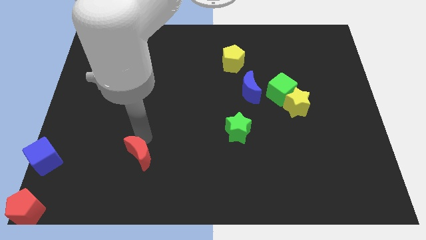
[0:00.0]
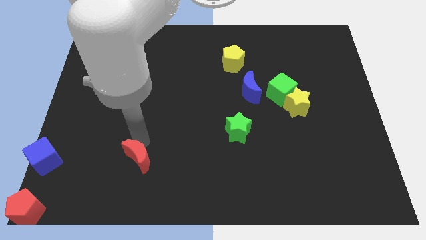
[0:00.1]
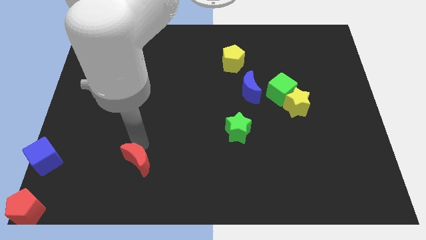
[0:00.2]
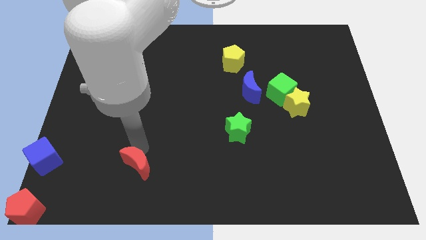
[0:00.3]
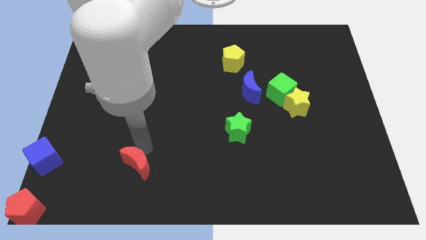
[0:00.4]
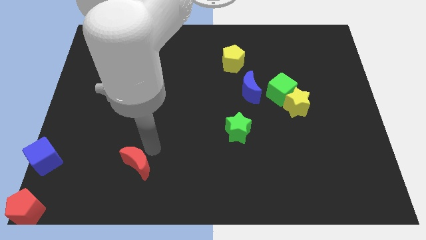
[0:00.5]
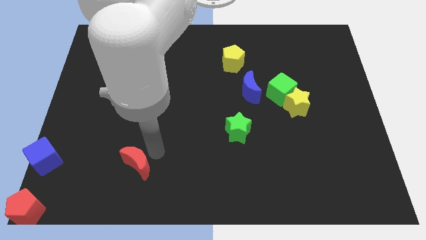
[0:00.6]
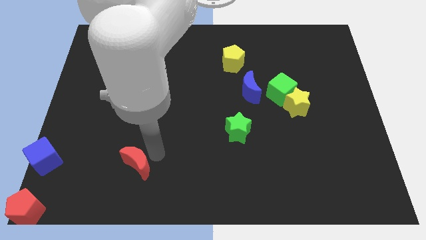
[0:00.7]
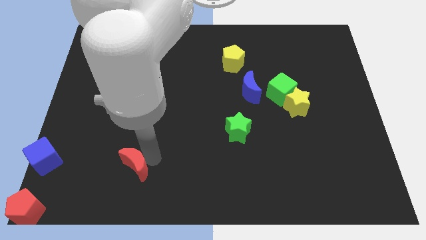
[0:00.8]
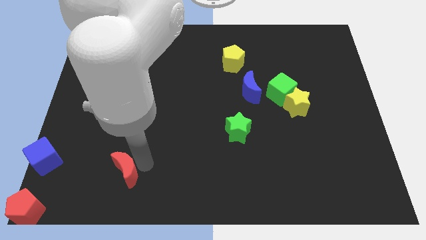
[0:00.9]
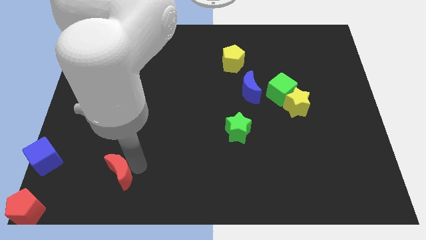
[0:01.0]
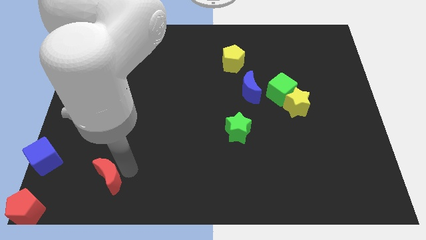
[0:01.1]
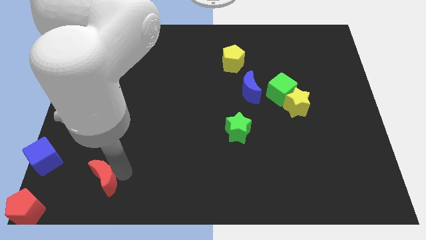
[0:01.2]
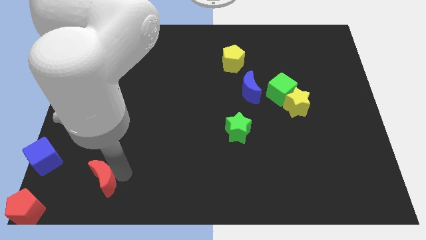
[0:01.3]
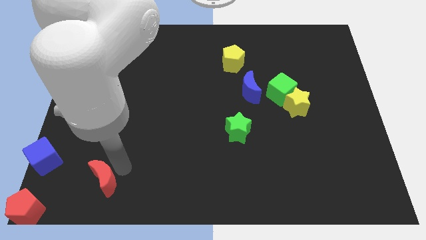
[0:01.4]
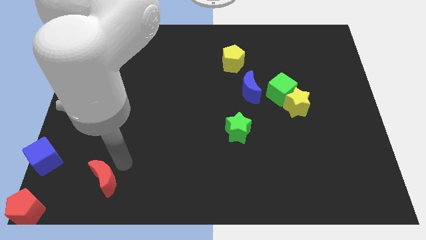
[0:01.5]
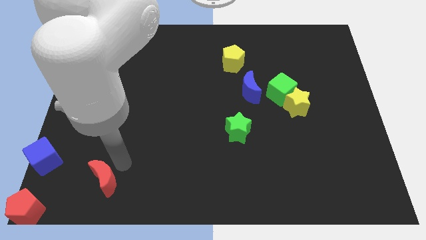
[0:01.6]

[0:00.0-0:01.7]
move the red crescent towards the red pentagon

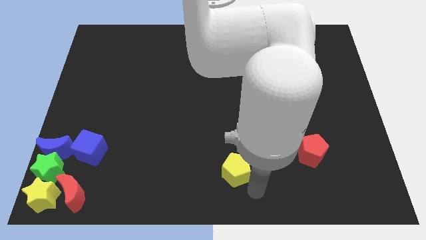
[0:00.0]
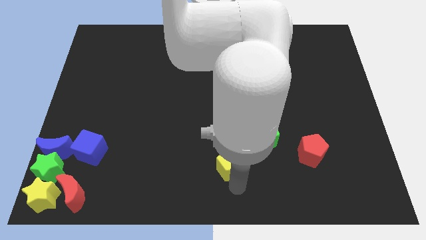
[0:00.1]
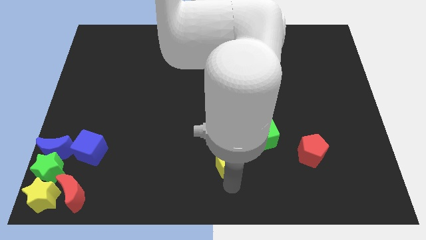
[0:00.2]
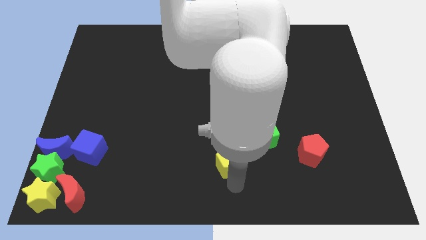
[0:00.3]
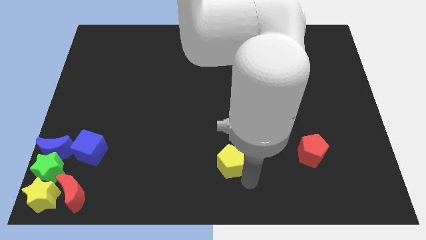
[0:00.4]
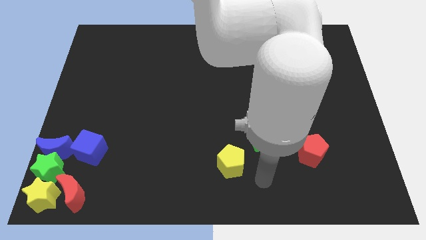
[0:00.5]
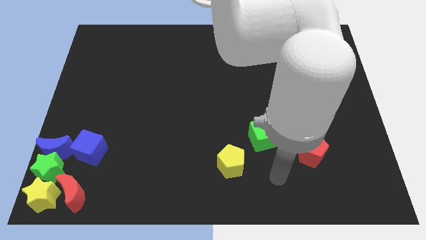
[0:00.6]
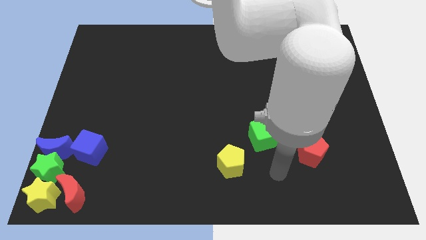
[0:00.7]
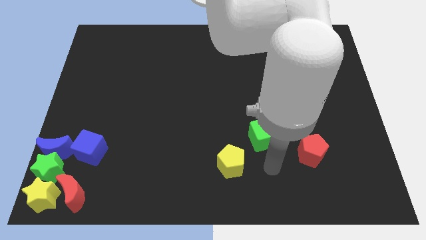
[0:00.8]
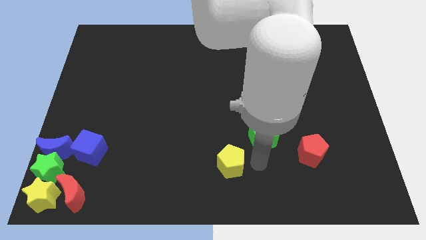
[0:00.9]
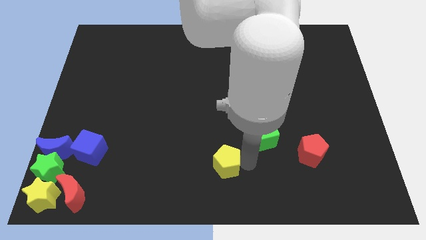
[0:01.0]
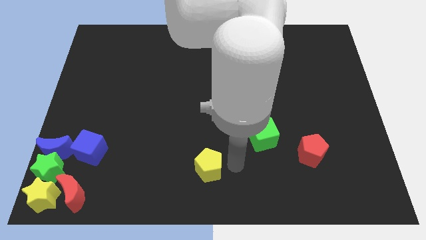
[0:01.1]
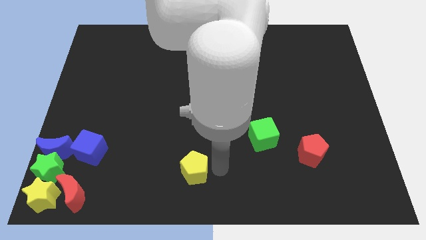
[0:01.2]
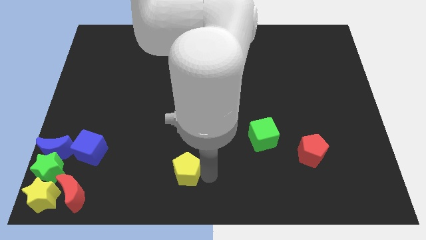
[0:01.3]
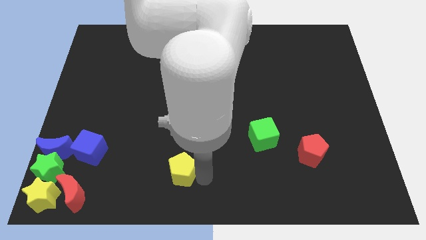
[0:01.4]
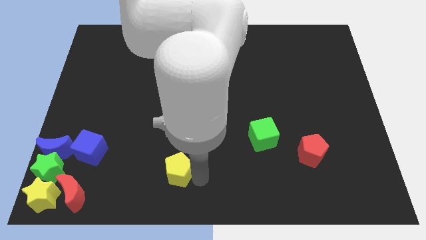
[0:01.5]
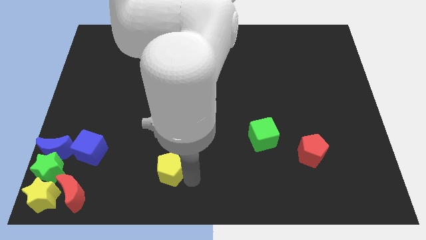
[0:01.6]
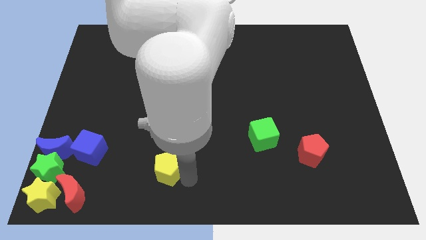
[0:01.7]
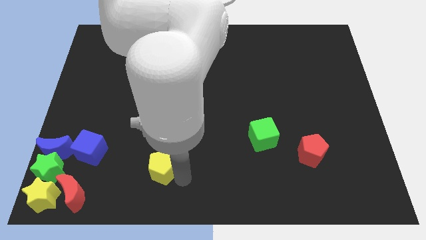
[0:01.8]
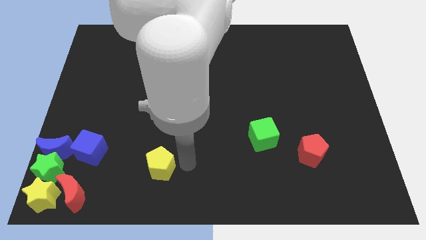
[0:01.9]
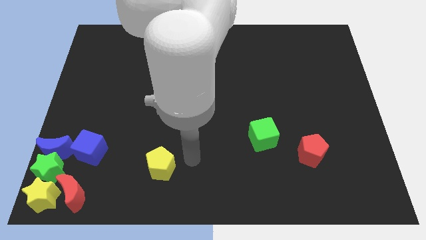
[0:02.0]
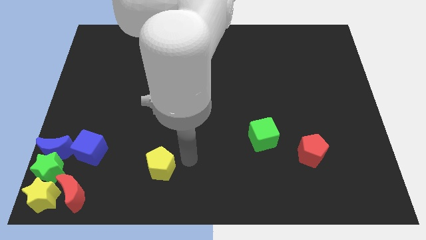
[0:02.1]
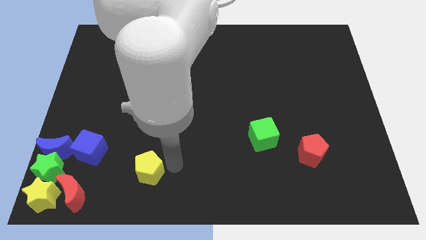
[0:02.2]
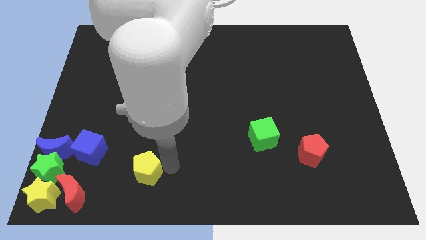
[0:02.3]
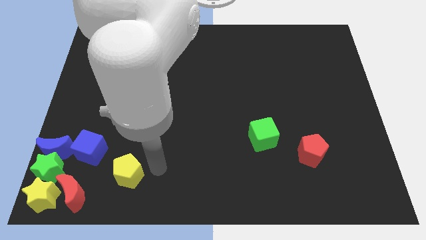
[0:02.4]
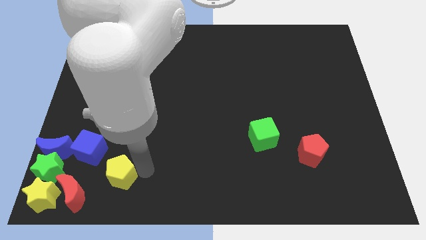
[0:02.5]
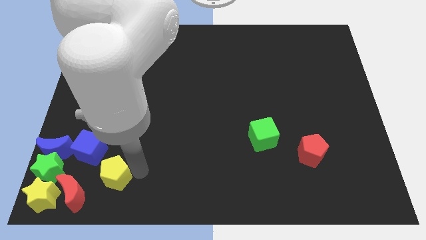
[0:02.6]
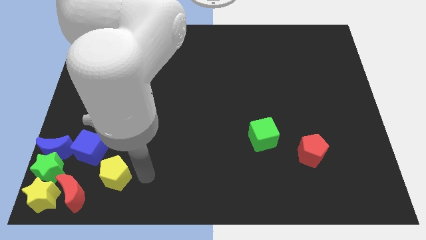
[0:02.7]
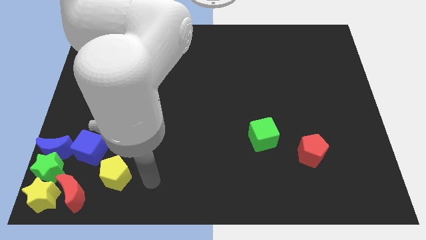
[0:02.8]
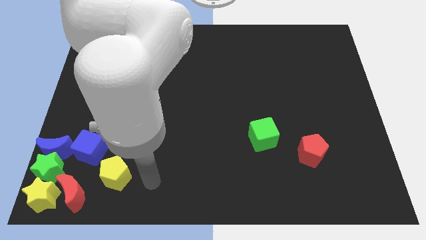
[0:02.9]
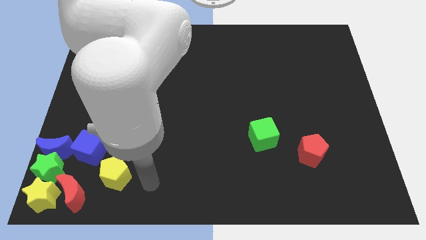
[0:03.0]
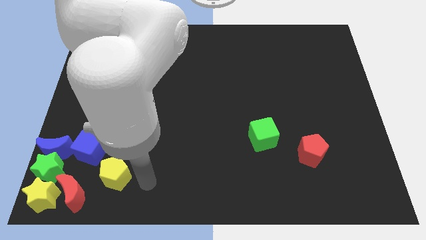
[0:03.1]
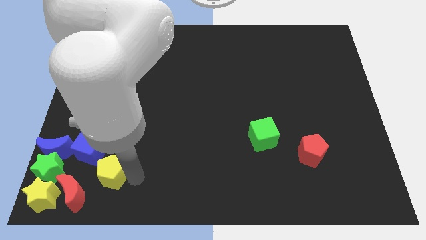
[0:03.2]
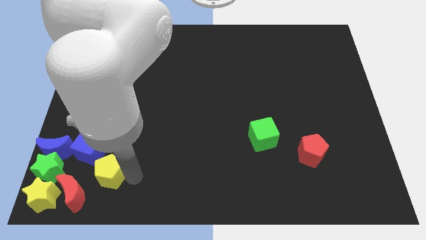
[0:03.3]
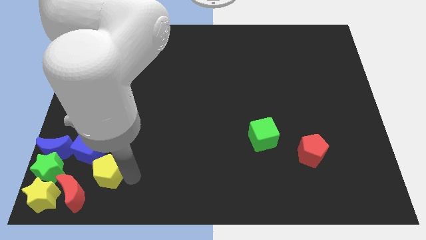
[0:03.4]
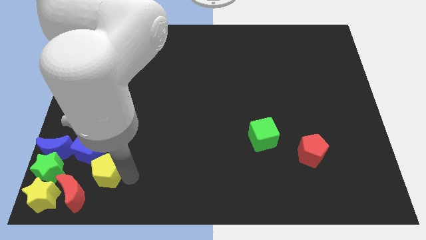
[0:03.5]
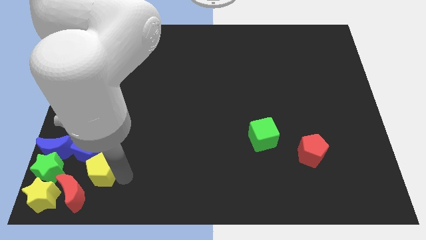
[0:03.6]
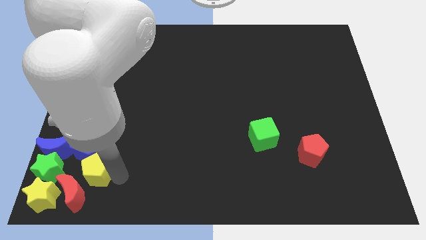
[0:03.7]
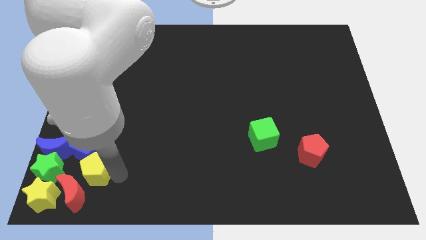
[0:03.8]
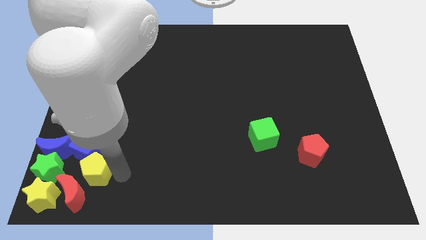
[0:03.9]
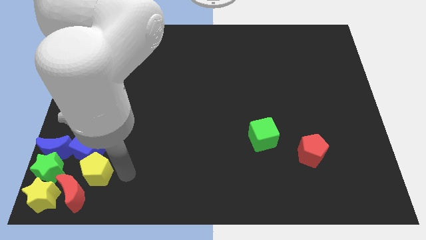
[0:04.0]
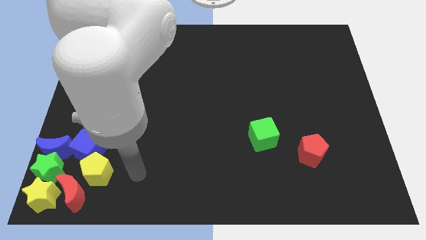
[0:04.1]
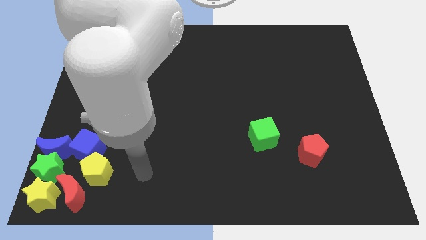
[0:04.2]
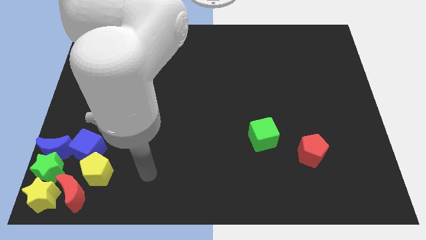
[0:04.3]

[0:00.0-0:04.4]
place the yellow pentagon below the blue cube

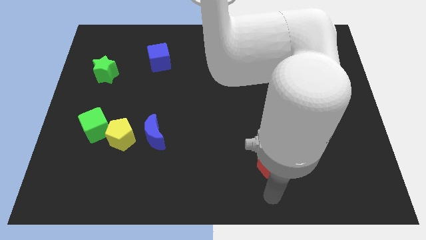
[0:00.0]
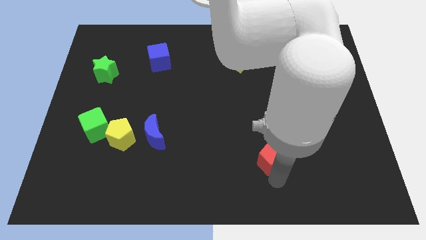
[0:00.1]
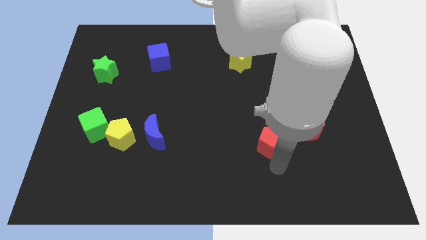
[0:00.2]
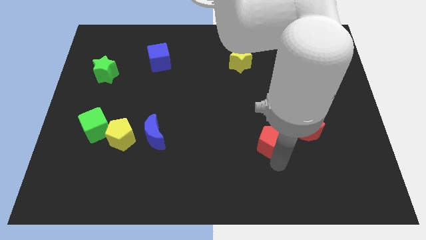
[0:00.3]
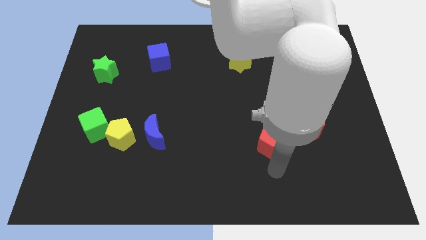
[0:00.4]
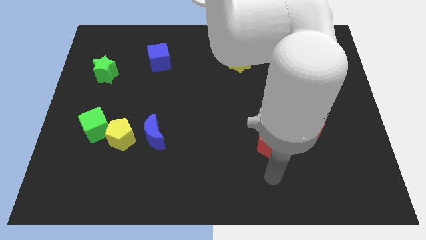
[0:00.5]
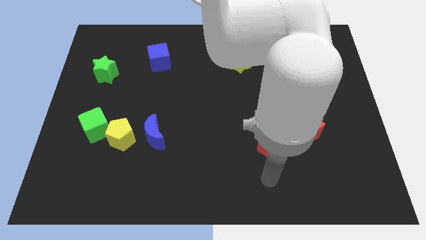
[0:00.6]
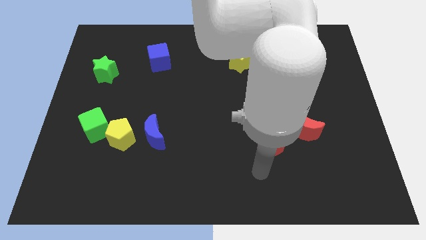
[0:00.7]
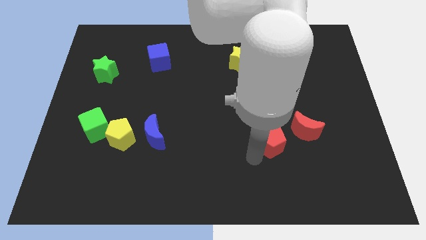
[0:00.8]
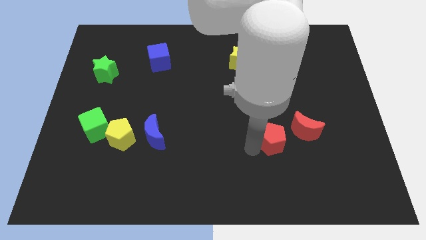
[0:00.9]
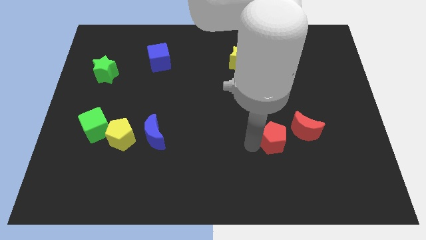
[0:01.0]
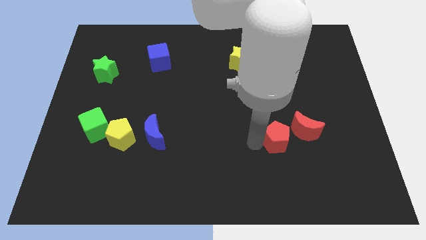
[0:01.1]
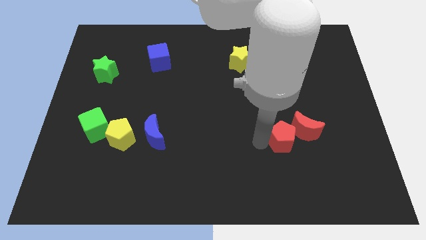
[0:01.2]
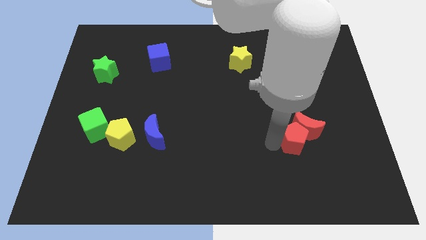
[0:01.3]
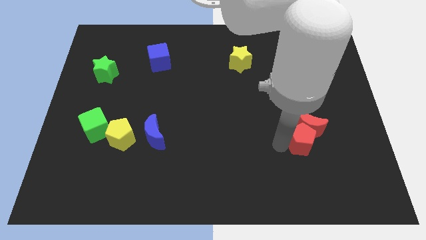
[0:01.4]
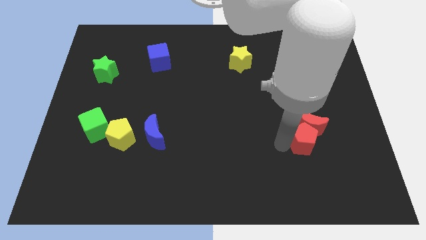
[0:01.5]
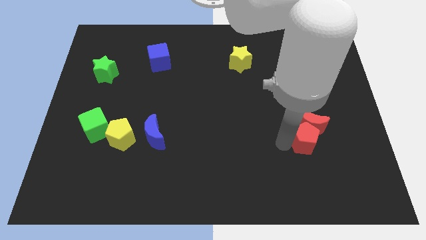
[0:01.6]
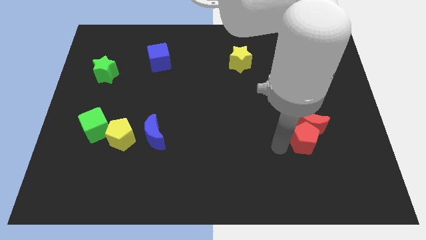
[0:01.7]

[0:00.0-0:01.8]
place red pentagon below the red moon

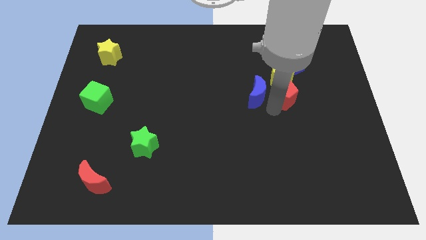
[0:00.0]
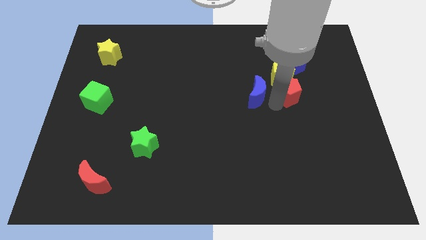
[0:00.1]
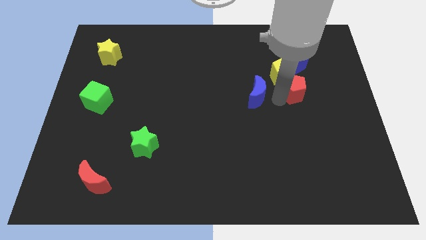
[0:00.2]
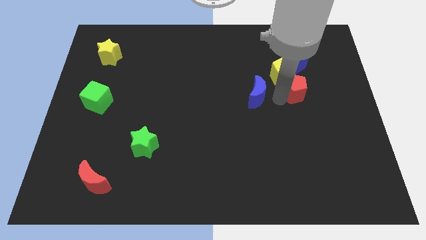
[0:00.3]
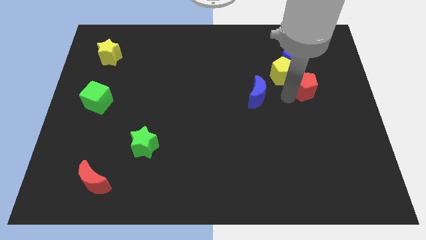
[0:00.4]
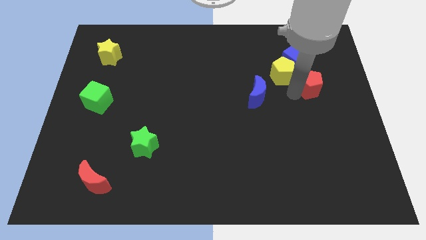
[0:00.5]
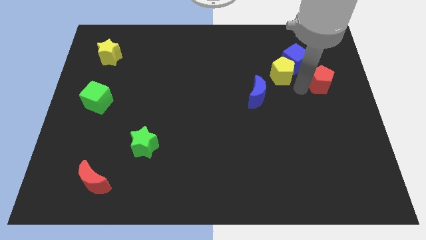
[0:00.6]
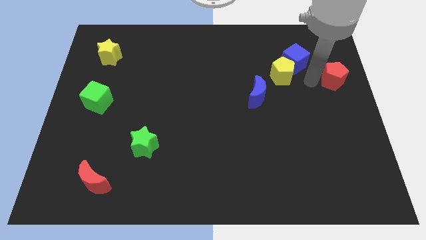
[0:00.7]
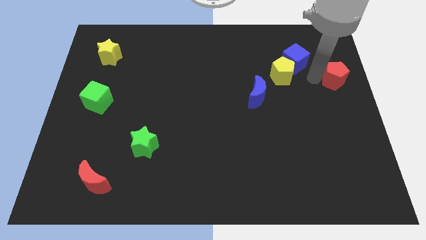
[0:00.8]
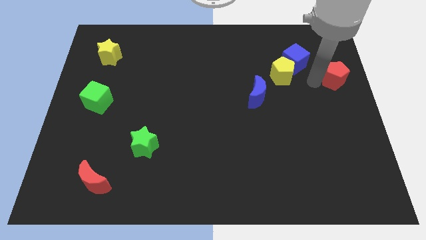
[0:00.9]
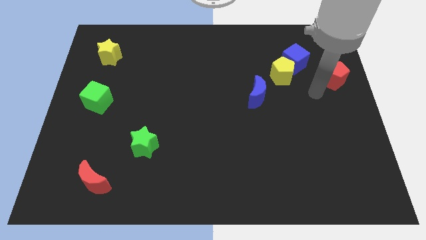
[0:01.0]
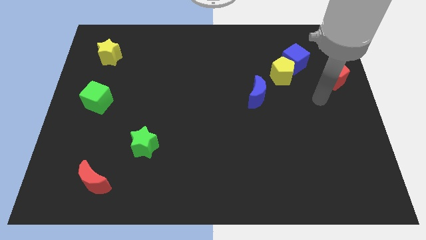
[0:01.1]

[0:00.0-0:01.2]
put the red pentagon to the right of the yellow pentagon
